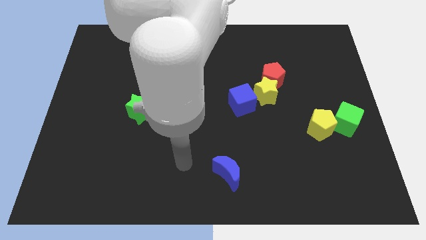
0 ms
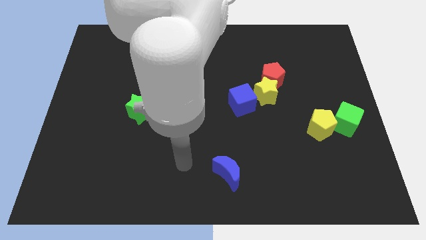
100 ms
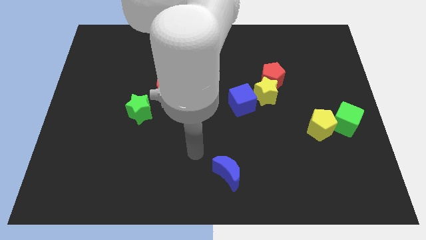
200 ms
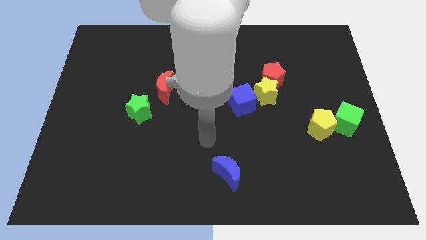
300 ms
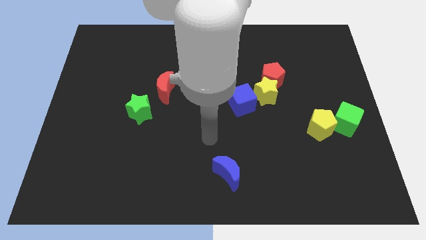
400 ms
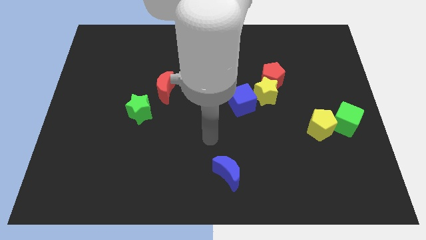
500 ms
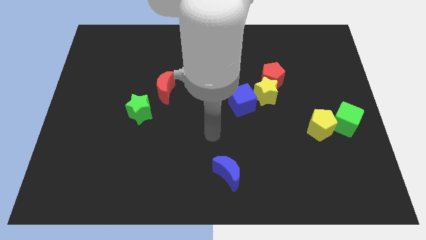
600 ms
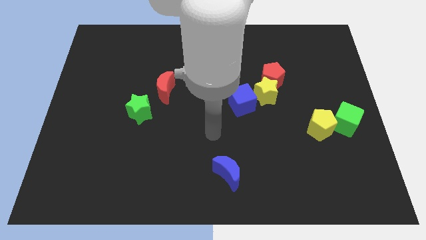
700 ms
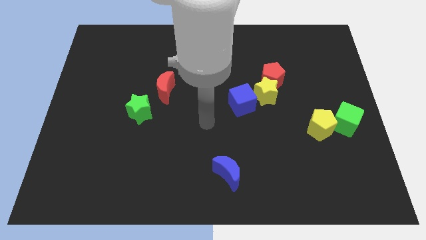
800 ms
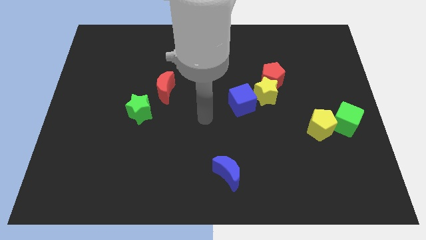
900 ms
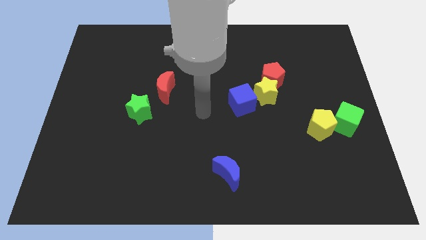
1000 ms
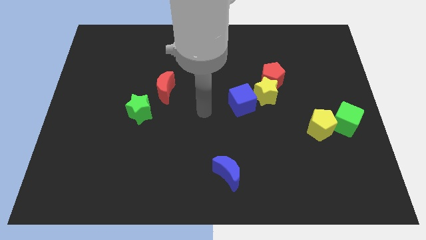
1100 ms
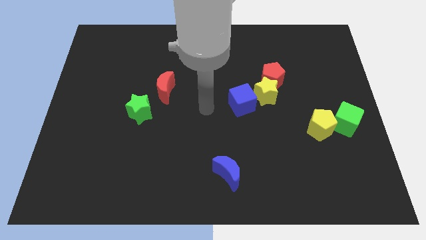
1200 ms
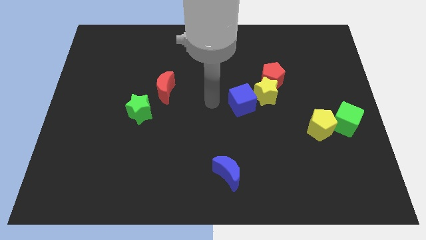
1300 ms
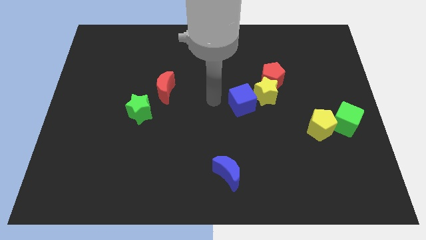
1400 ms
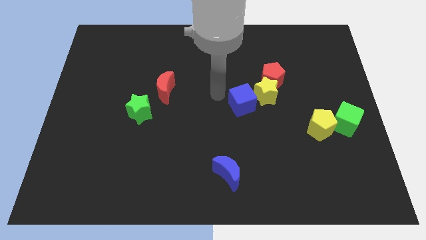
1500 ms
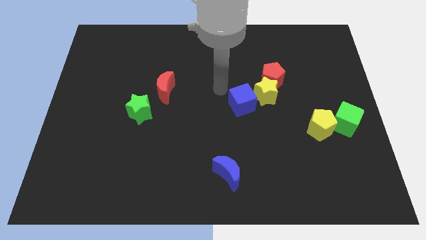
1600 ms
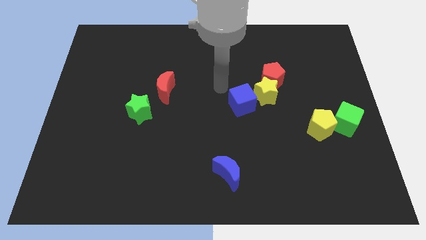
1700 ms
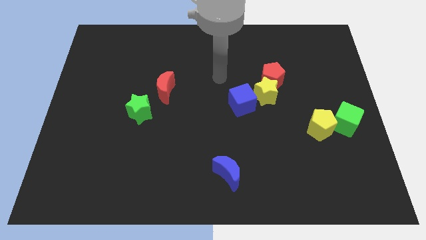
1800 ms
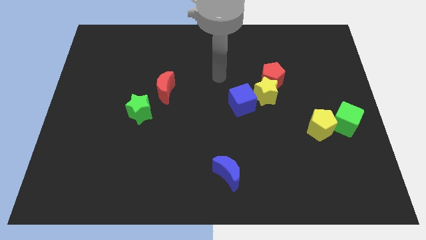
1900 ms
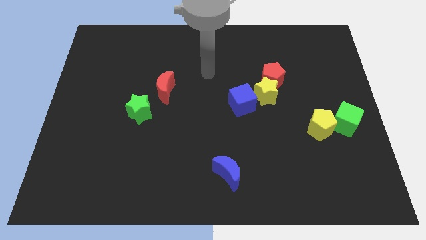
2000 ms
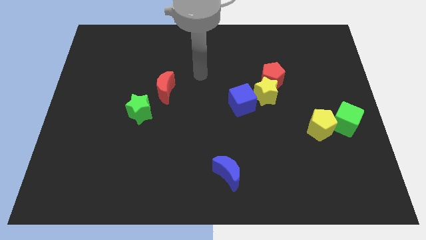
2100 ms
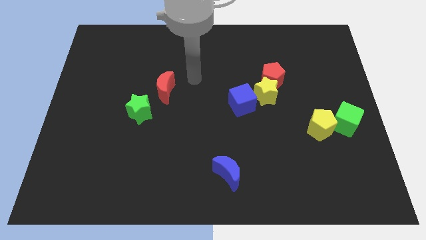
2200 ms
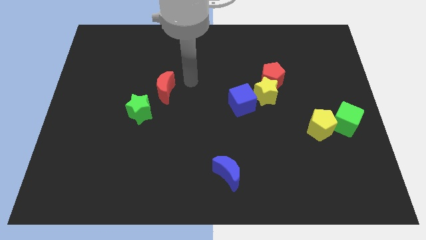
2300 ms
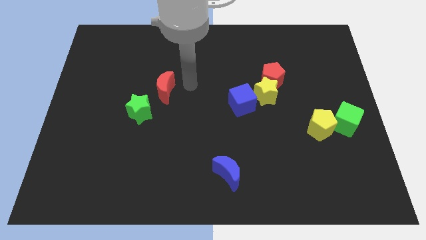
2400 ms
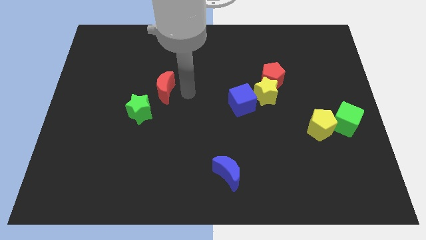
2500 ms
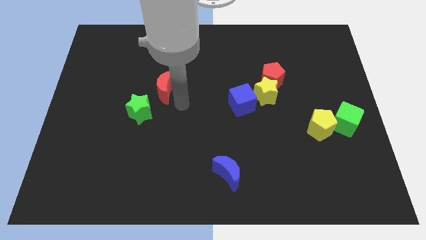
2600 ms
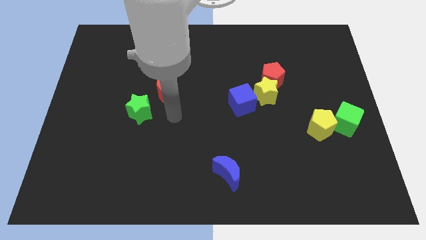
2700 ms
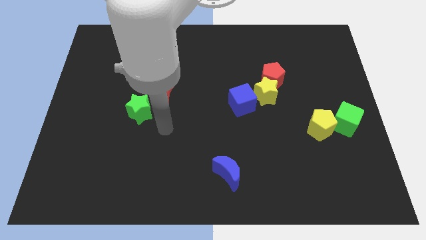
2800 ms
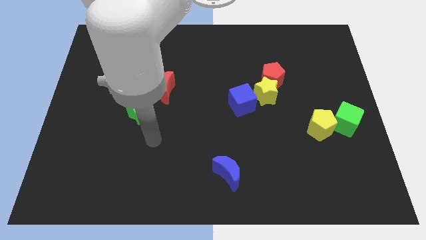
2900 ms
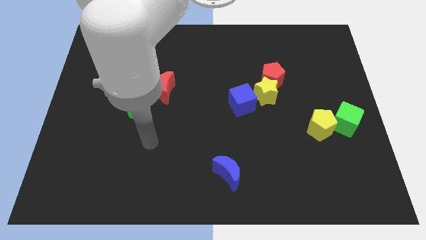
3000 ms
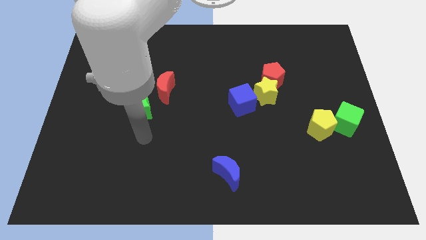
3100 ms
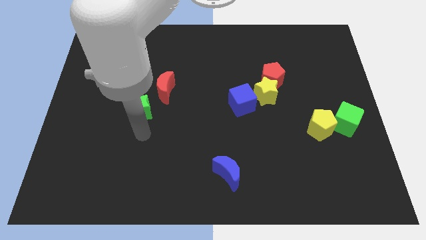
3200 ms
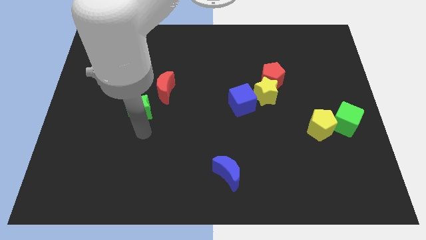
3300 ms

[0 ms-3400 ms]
place your arm below the green star

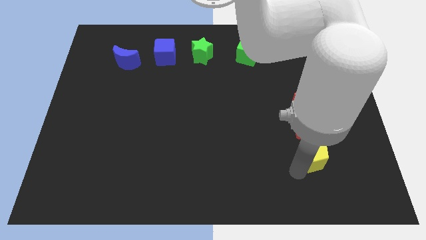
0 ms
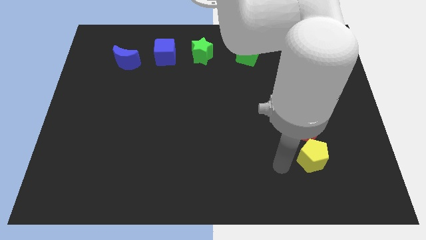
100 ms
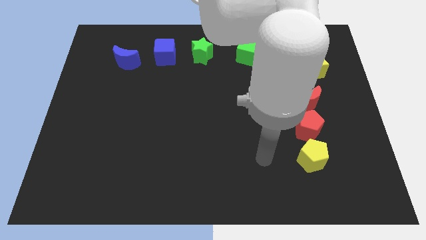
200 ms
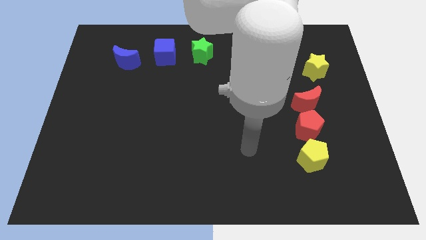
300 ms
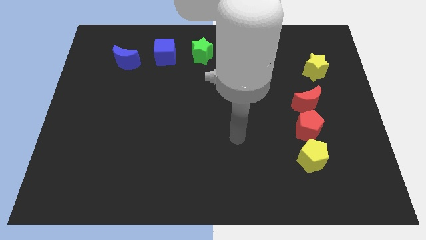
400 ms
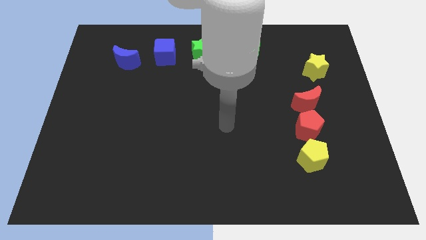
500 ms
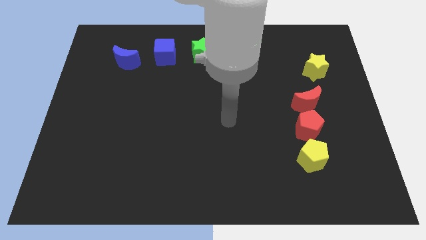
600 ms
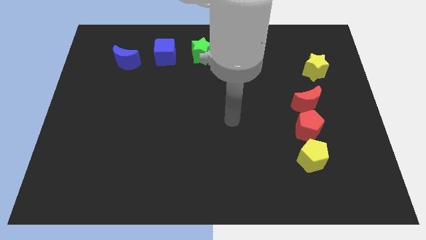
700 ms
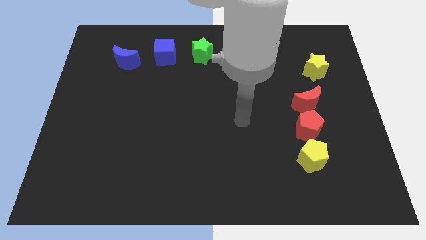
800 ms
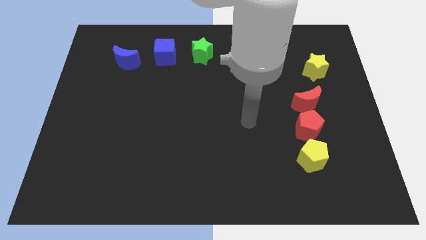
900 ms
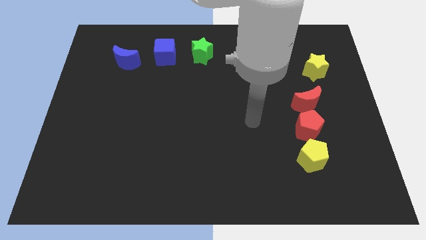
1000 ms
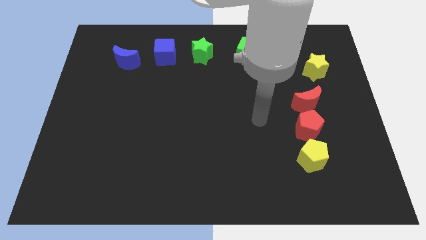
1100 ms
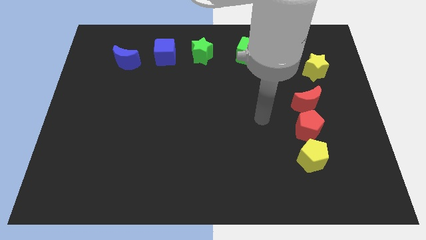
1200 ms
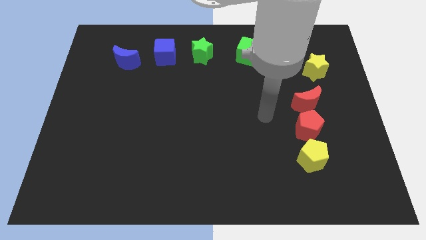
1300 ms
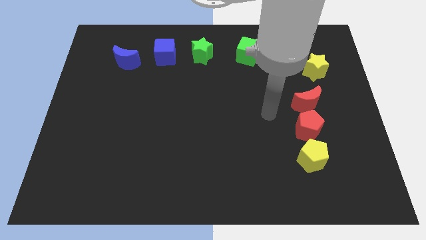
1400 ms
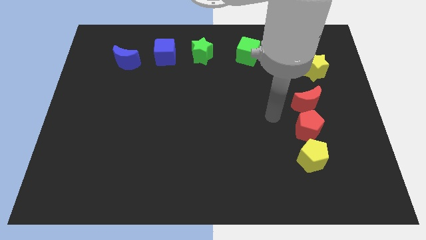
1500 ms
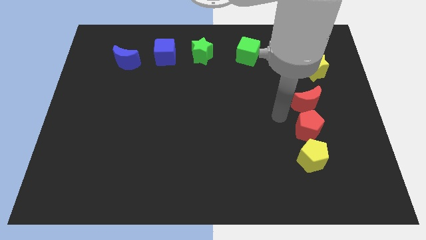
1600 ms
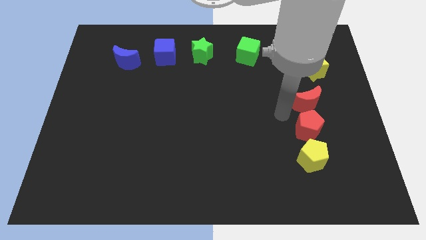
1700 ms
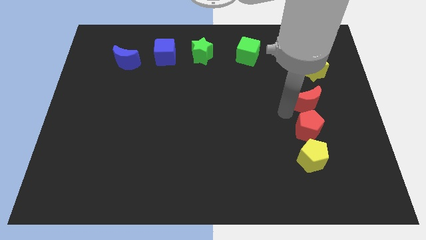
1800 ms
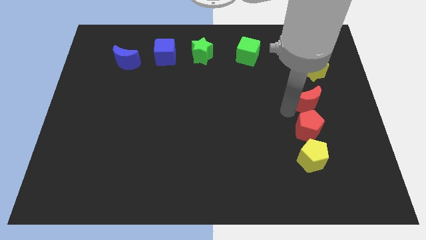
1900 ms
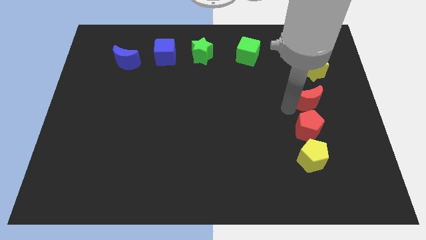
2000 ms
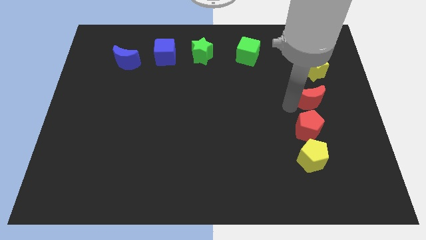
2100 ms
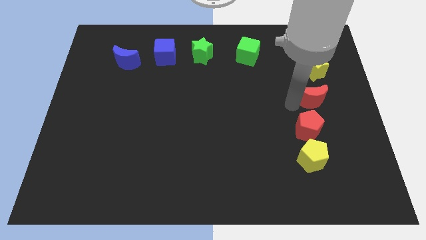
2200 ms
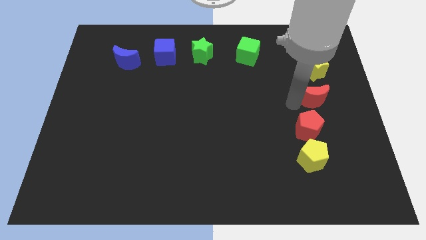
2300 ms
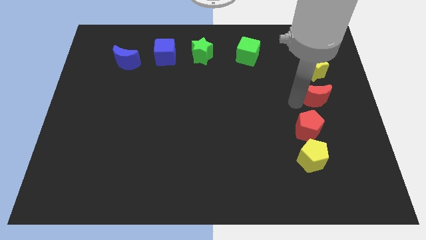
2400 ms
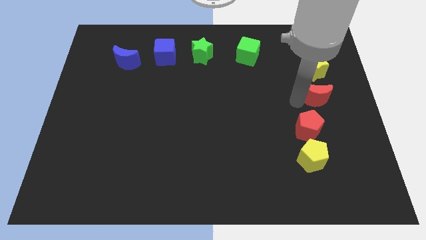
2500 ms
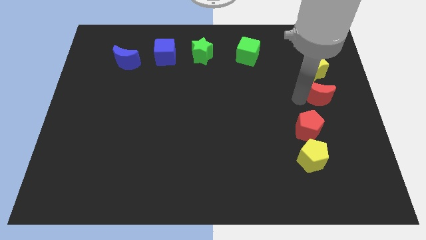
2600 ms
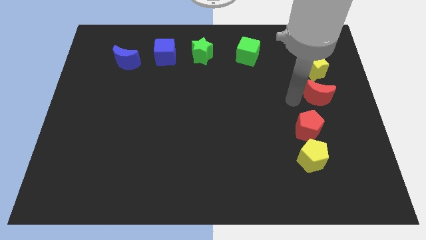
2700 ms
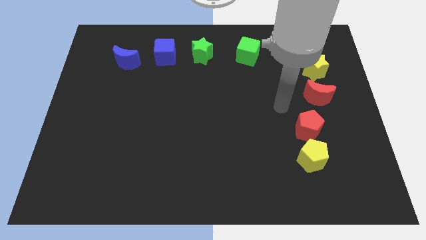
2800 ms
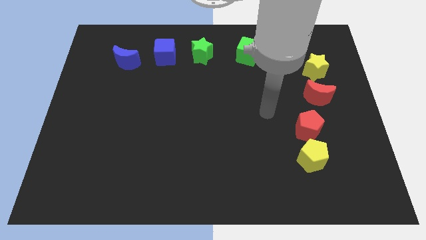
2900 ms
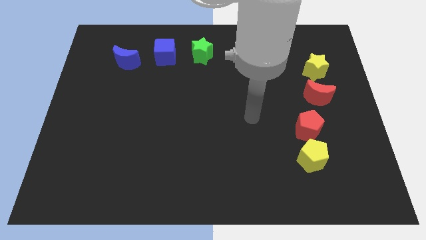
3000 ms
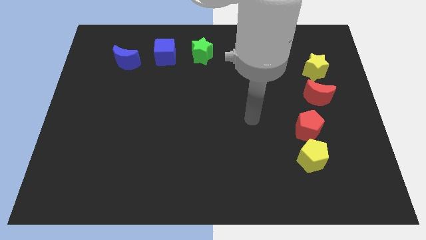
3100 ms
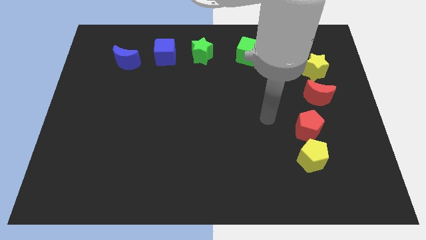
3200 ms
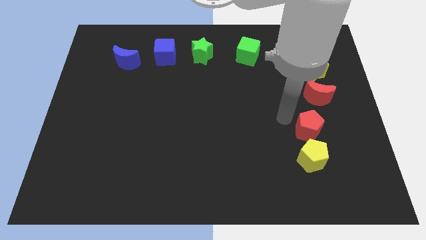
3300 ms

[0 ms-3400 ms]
place red crescent to the bottom of yellow star

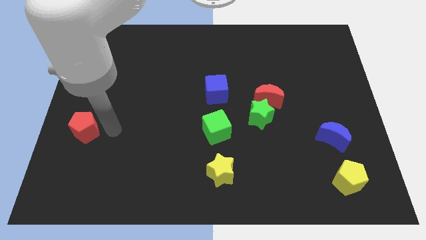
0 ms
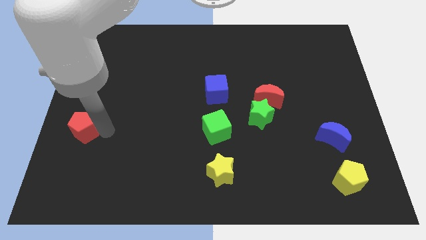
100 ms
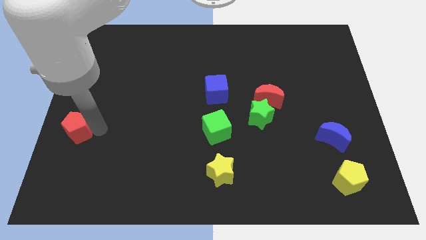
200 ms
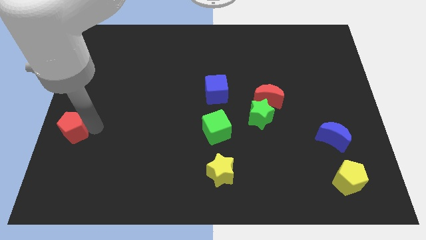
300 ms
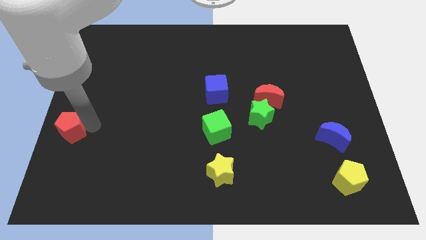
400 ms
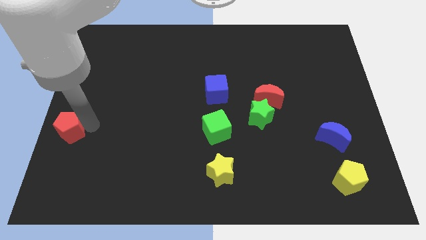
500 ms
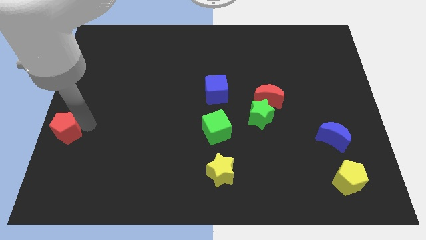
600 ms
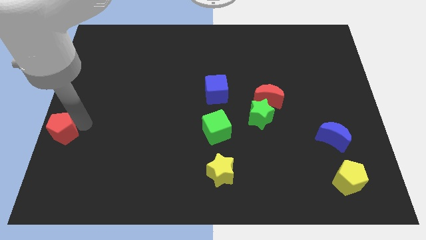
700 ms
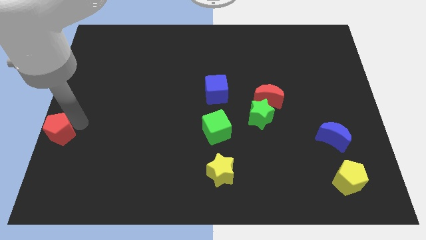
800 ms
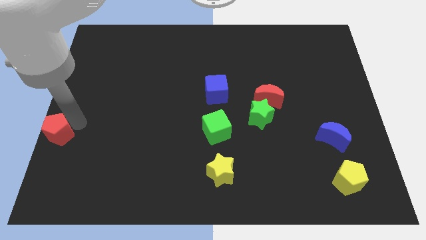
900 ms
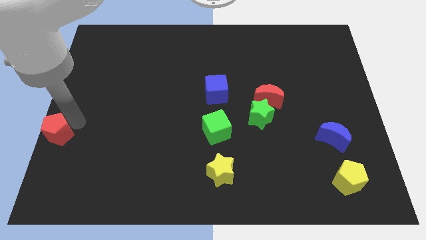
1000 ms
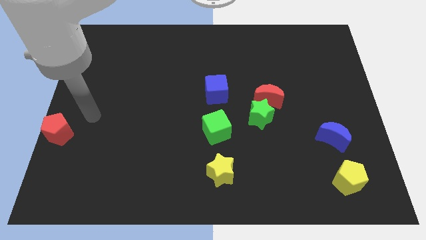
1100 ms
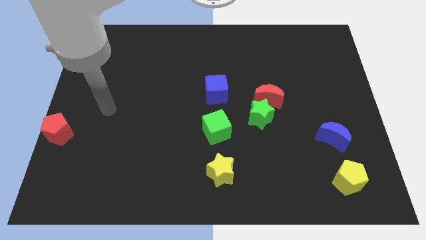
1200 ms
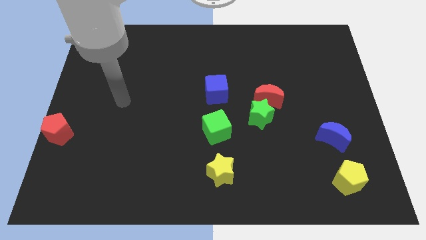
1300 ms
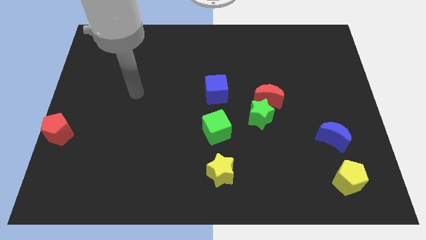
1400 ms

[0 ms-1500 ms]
push the red pentagon towards the left center of the board

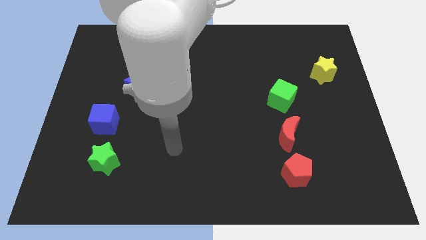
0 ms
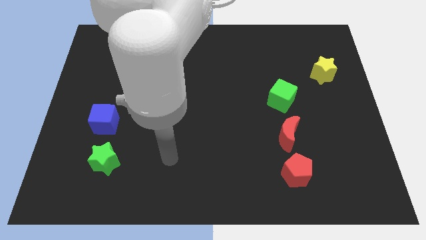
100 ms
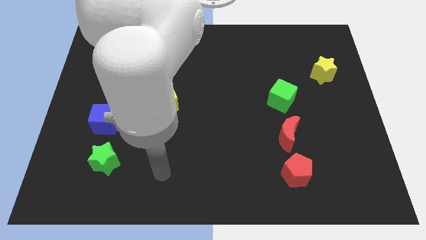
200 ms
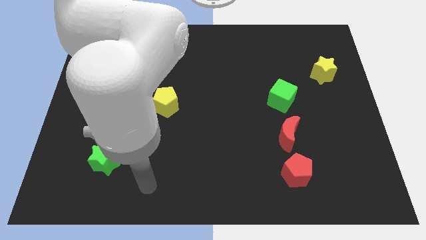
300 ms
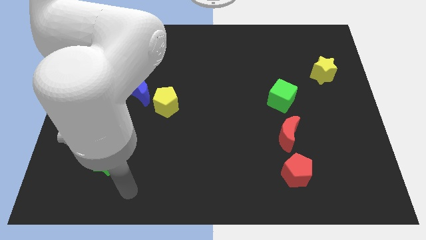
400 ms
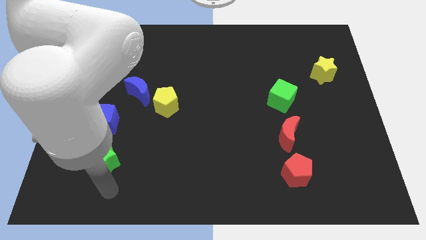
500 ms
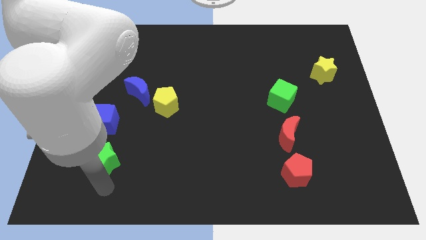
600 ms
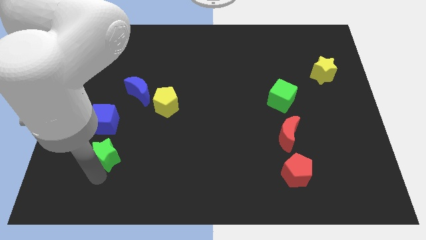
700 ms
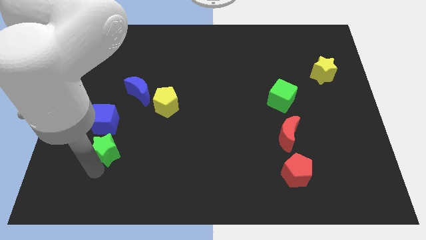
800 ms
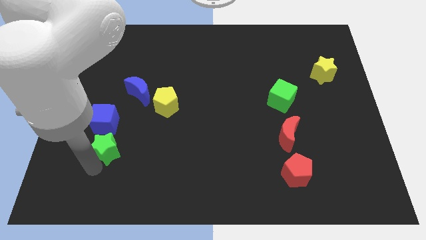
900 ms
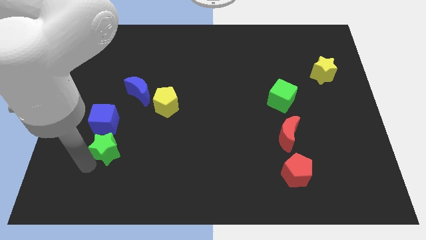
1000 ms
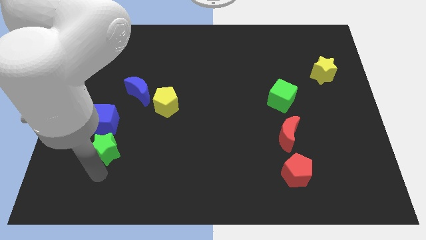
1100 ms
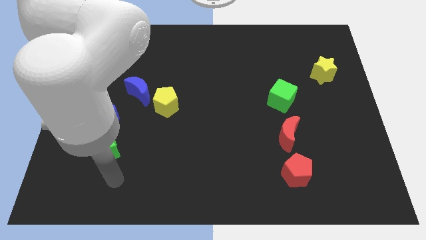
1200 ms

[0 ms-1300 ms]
push the green star slightly close to the blue cube
